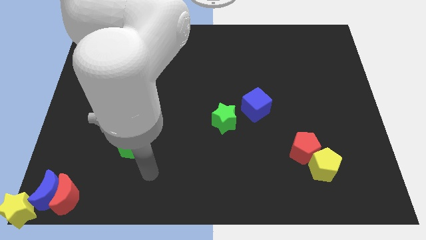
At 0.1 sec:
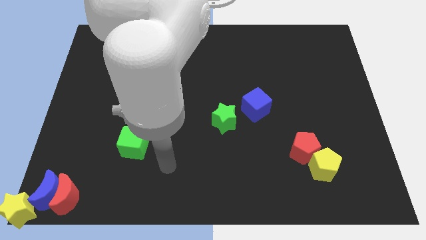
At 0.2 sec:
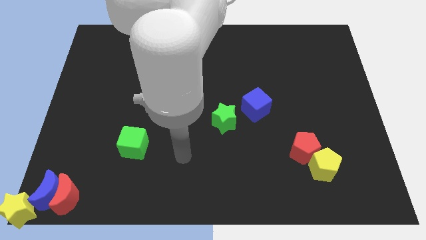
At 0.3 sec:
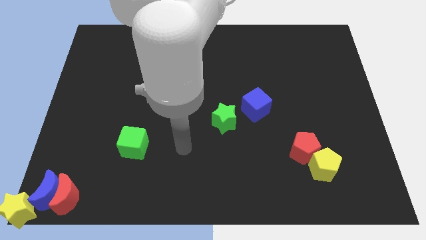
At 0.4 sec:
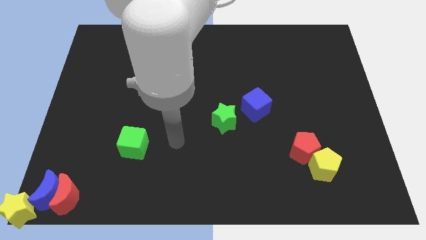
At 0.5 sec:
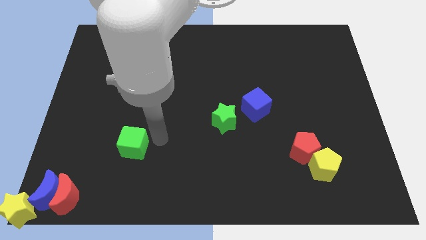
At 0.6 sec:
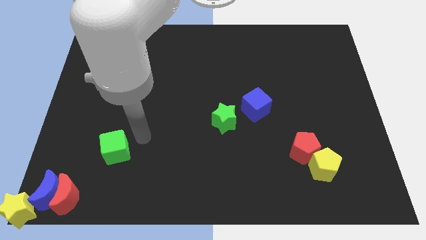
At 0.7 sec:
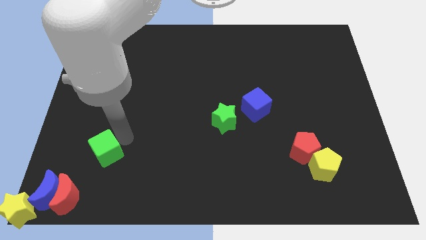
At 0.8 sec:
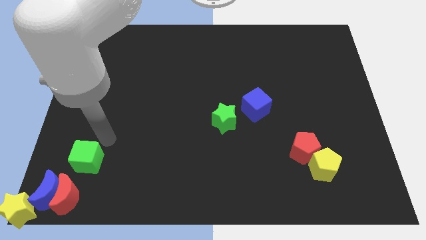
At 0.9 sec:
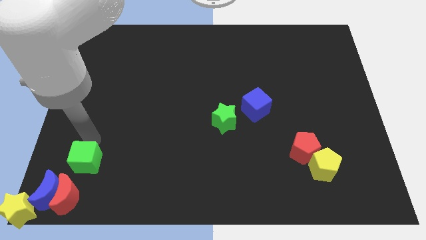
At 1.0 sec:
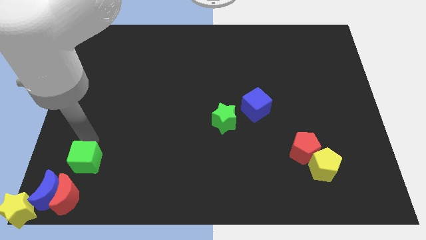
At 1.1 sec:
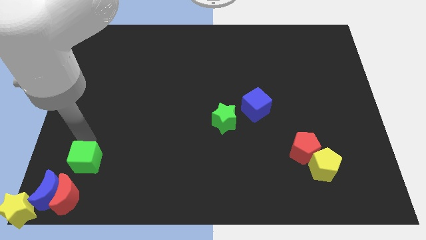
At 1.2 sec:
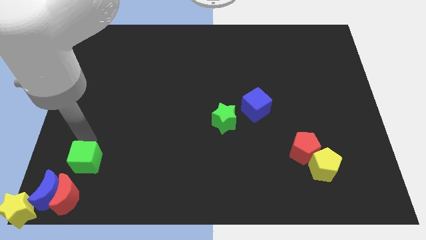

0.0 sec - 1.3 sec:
slide the green cube vertically above the red moon

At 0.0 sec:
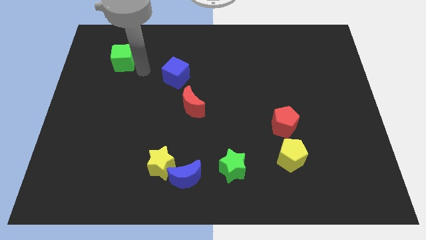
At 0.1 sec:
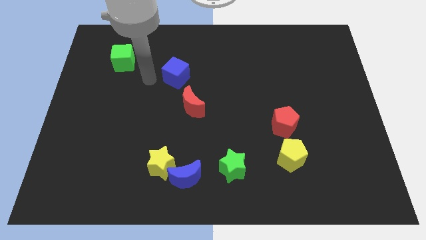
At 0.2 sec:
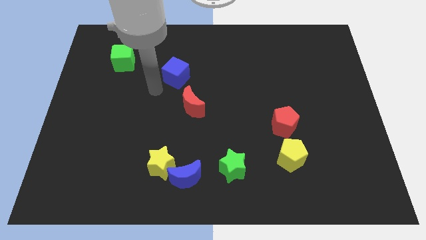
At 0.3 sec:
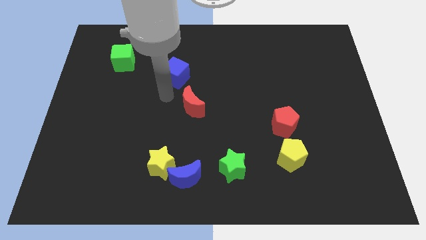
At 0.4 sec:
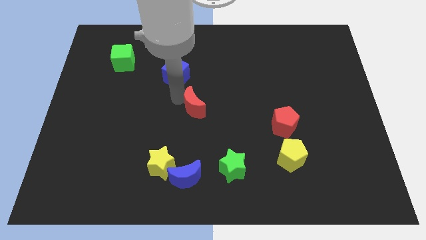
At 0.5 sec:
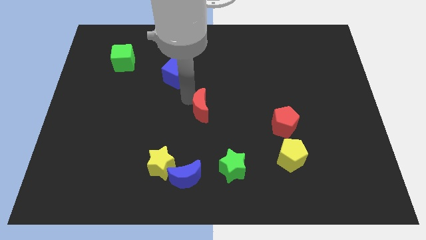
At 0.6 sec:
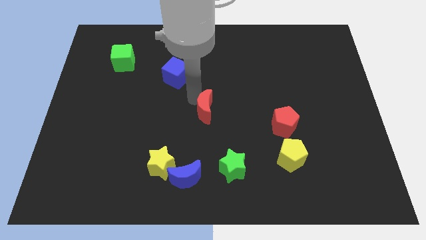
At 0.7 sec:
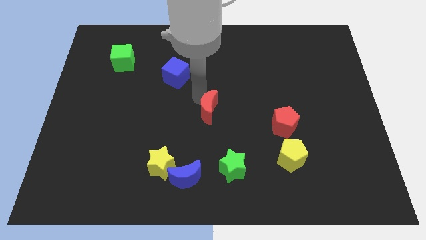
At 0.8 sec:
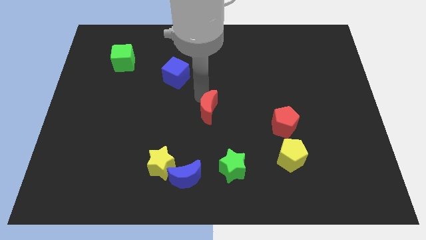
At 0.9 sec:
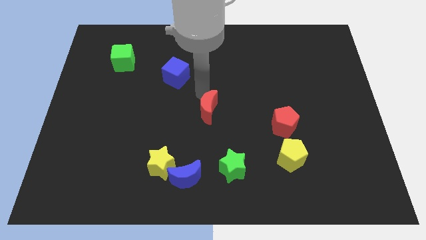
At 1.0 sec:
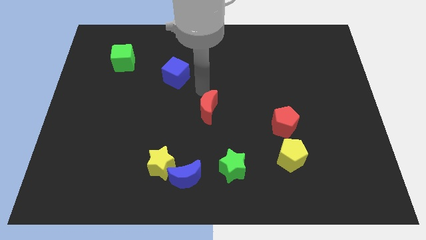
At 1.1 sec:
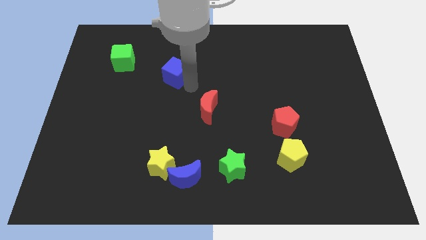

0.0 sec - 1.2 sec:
place red moon to the center of the board

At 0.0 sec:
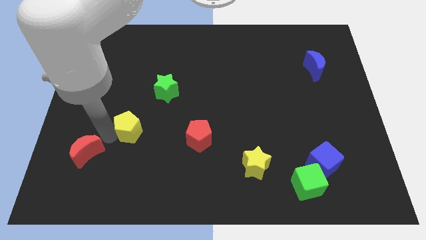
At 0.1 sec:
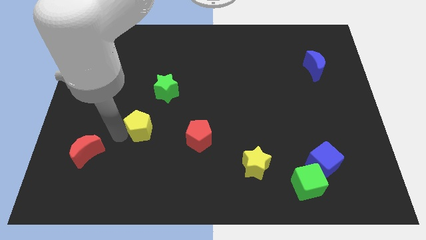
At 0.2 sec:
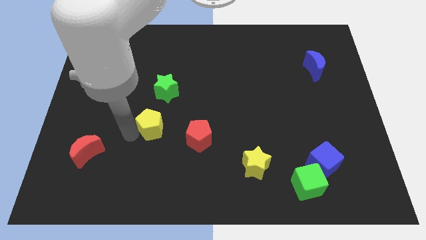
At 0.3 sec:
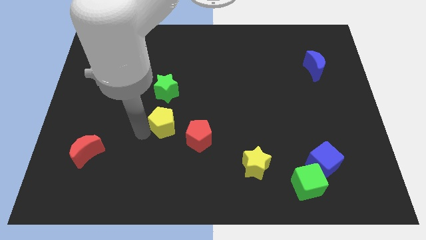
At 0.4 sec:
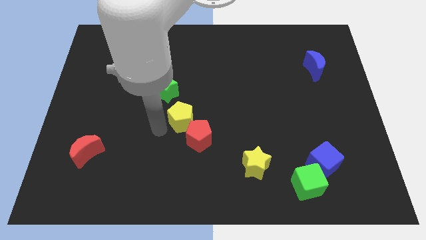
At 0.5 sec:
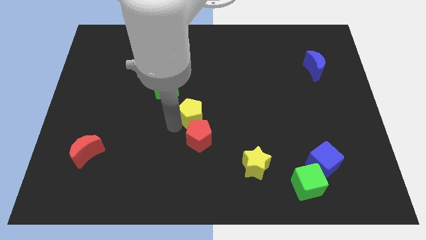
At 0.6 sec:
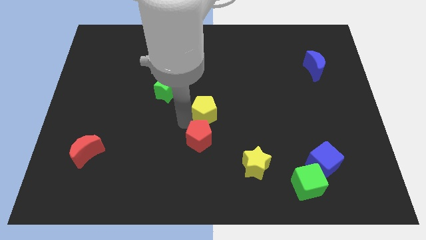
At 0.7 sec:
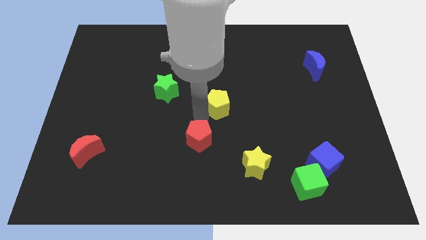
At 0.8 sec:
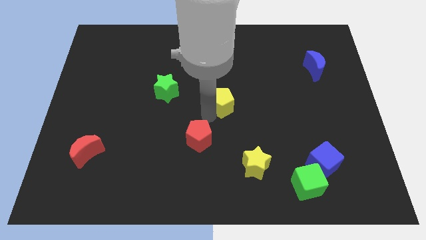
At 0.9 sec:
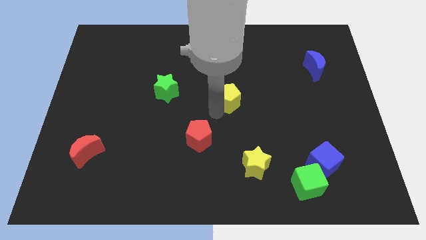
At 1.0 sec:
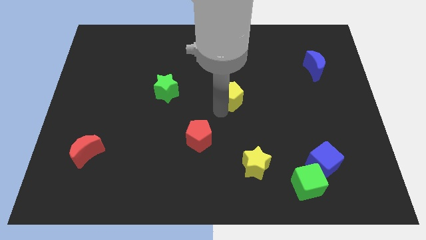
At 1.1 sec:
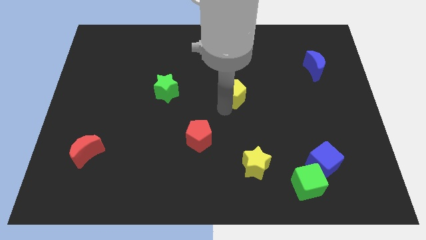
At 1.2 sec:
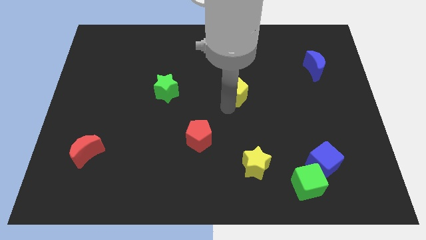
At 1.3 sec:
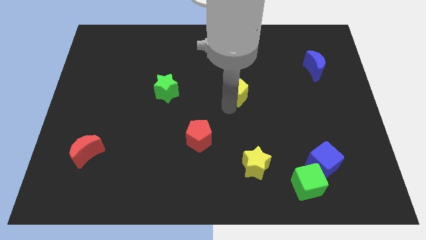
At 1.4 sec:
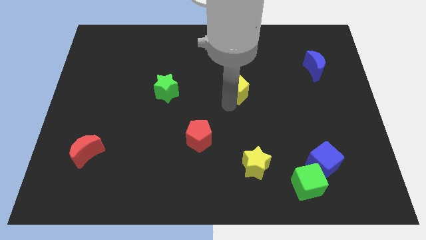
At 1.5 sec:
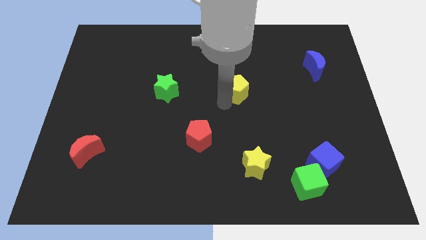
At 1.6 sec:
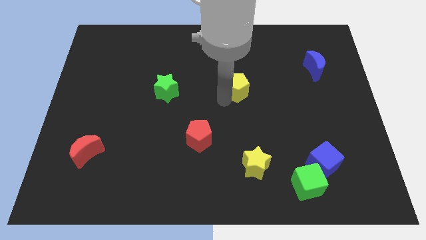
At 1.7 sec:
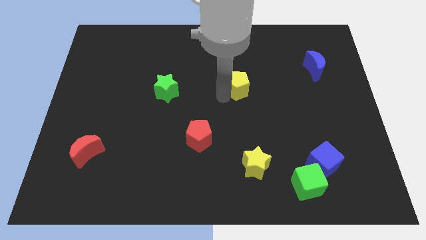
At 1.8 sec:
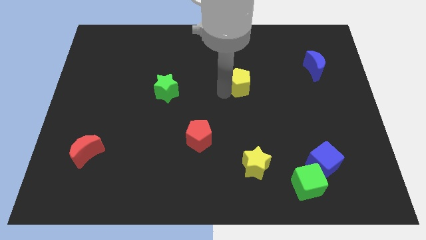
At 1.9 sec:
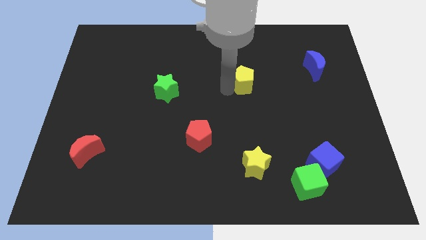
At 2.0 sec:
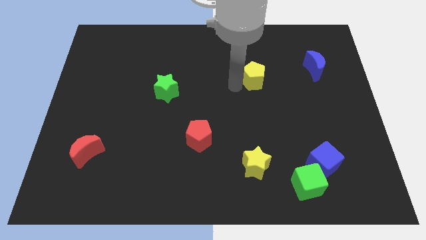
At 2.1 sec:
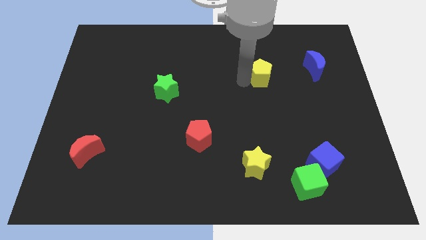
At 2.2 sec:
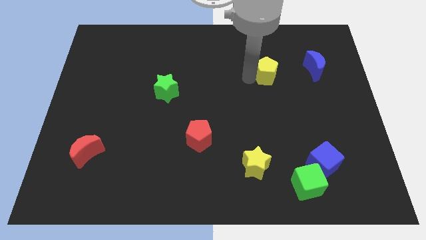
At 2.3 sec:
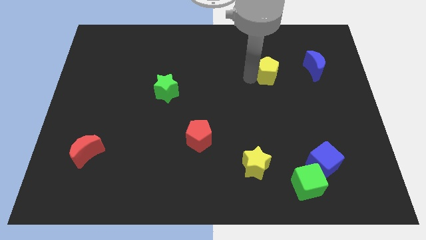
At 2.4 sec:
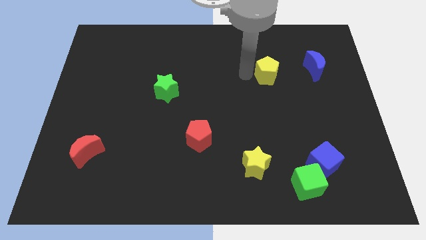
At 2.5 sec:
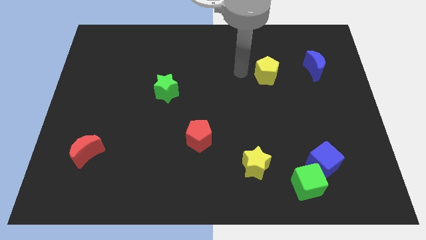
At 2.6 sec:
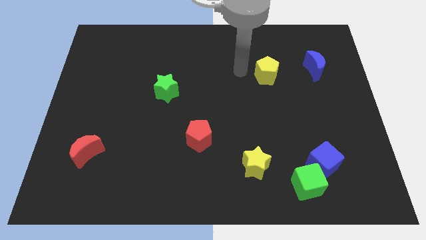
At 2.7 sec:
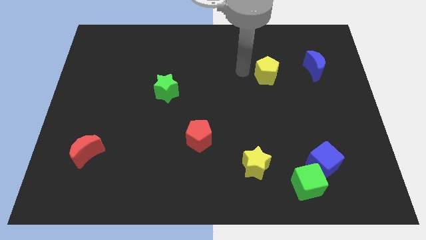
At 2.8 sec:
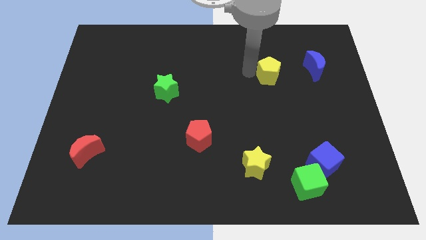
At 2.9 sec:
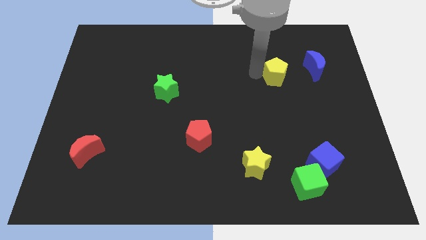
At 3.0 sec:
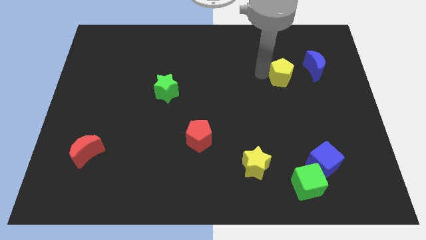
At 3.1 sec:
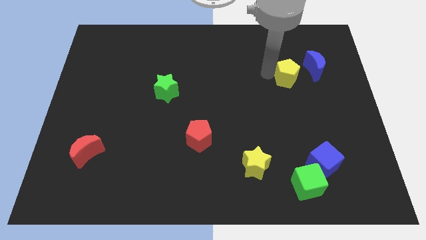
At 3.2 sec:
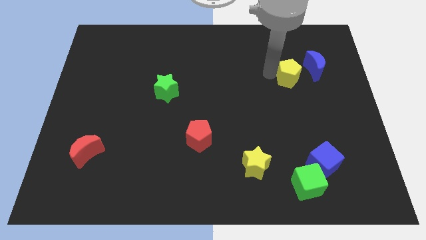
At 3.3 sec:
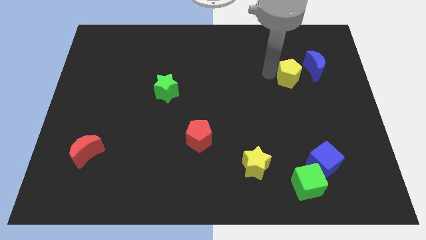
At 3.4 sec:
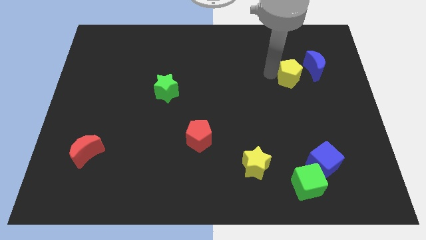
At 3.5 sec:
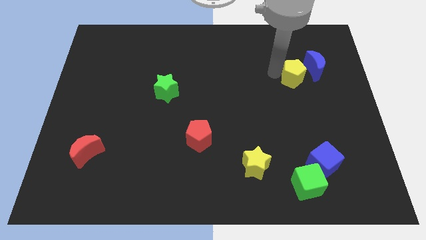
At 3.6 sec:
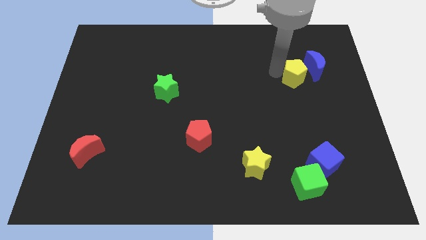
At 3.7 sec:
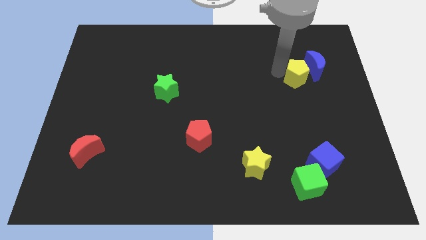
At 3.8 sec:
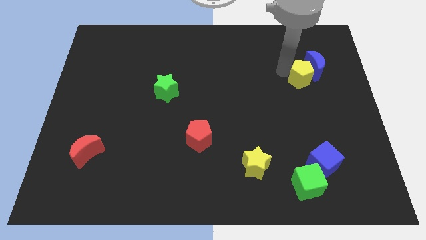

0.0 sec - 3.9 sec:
move the yellow pentagon close to the blue moon

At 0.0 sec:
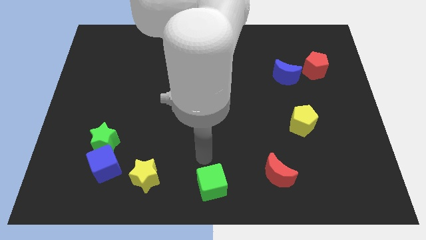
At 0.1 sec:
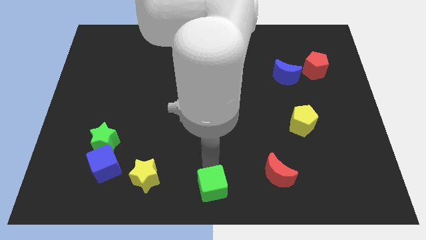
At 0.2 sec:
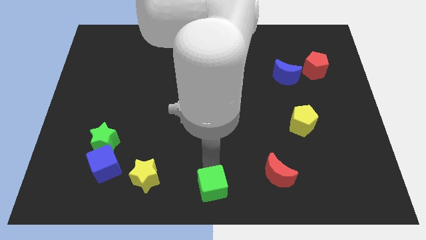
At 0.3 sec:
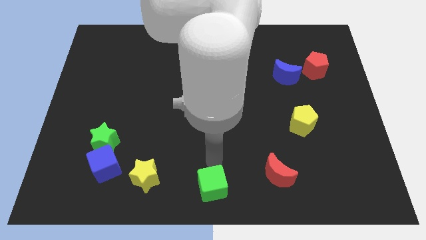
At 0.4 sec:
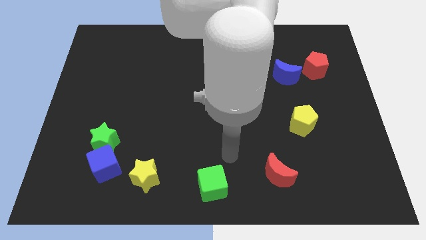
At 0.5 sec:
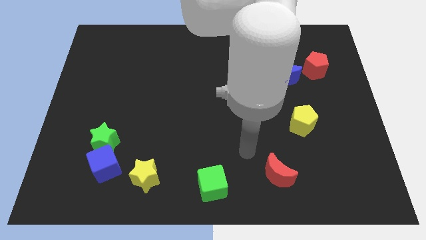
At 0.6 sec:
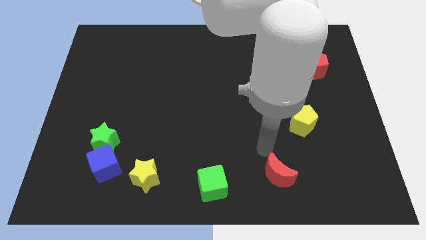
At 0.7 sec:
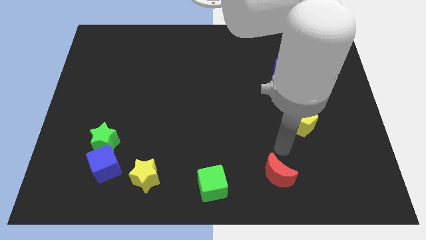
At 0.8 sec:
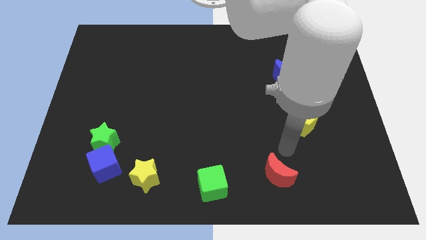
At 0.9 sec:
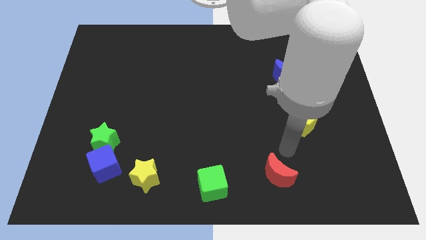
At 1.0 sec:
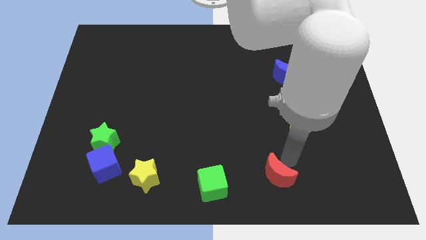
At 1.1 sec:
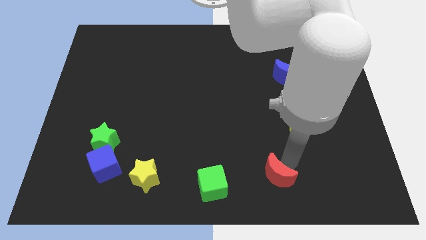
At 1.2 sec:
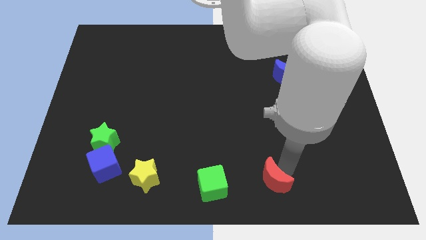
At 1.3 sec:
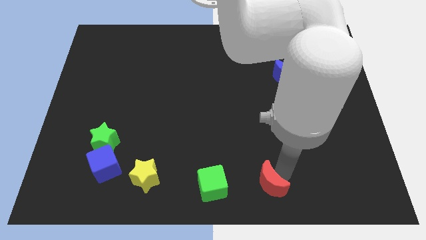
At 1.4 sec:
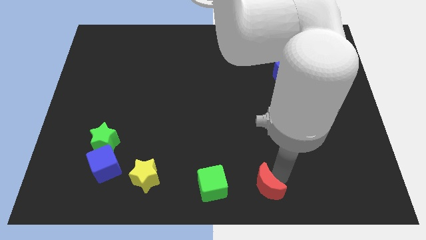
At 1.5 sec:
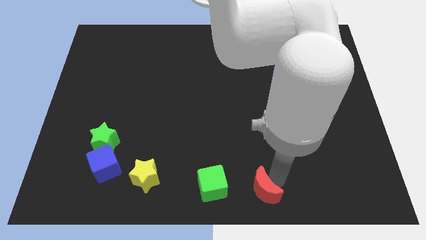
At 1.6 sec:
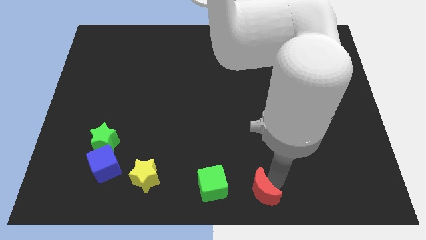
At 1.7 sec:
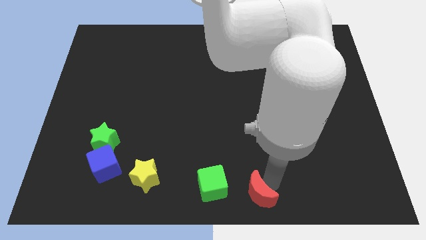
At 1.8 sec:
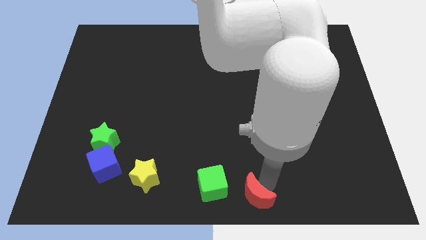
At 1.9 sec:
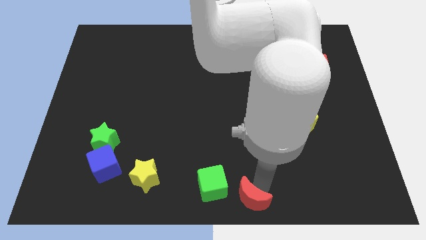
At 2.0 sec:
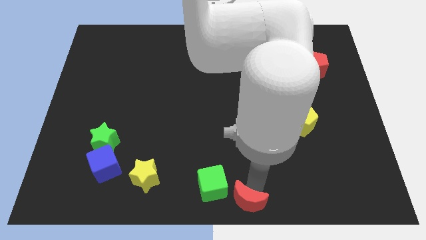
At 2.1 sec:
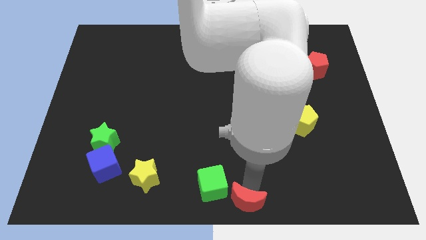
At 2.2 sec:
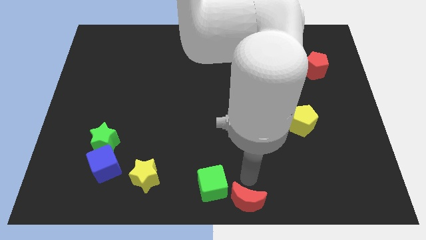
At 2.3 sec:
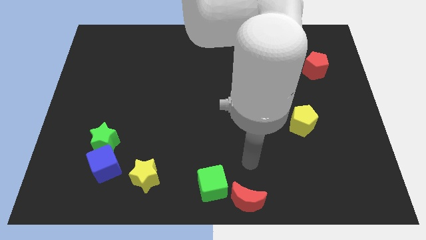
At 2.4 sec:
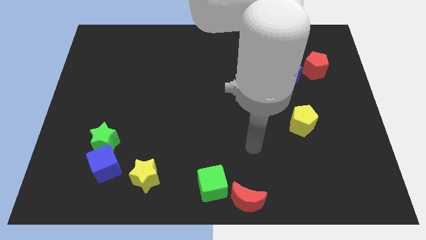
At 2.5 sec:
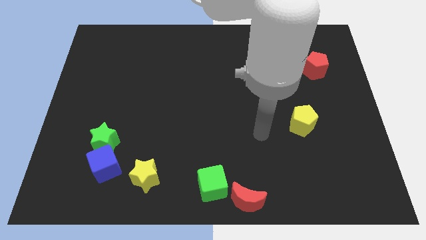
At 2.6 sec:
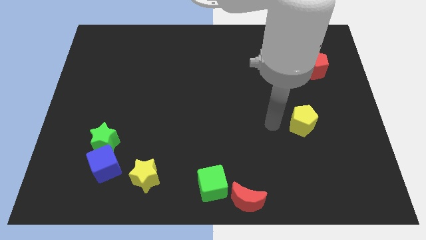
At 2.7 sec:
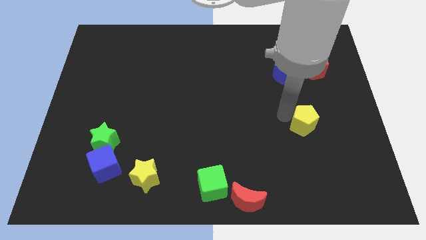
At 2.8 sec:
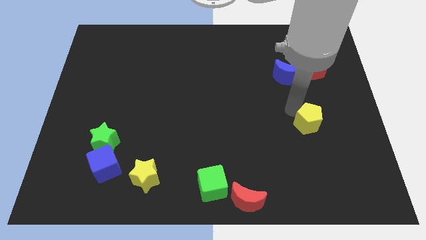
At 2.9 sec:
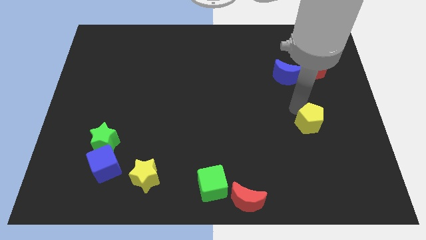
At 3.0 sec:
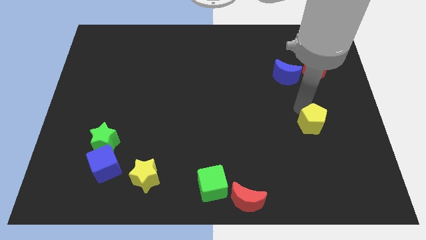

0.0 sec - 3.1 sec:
place the red crescent at the bottom center
